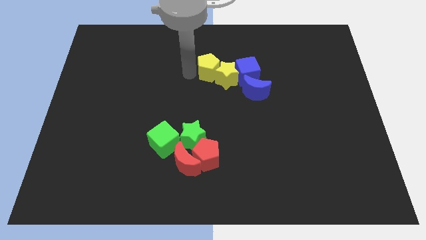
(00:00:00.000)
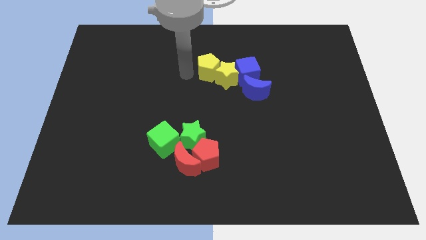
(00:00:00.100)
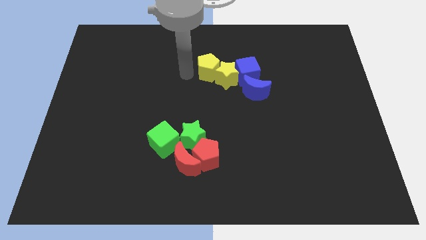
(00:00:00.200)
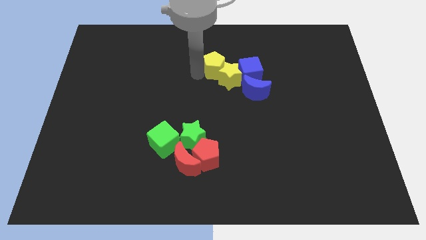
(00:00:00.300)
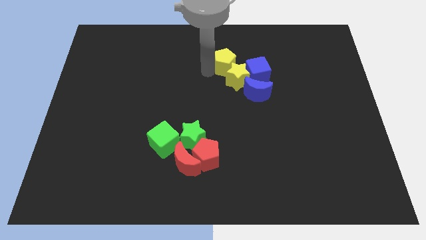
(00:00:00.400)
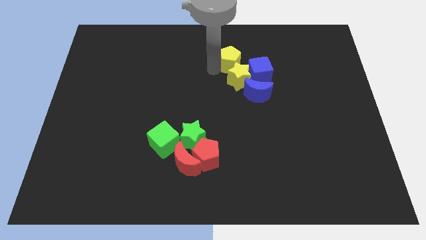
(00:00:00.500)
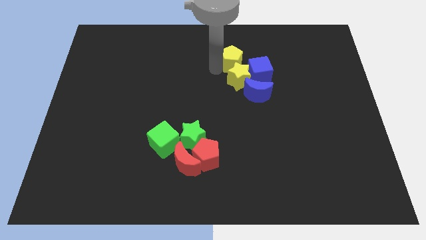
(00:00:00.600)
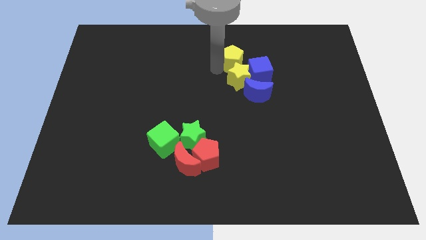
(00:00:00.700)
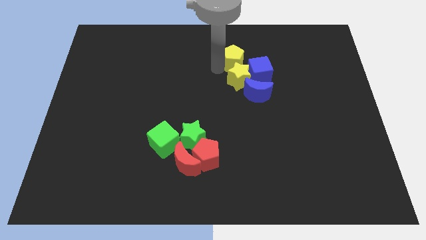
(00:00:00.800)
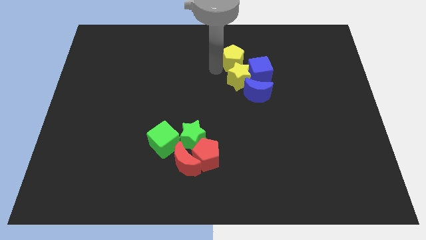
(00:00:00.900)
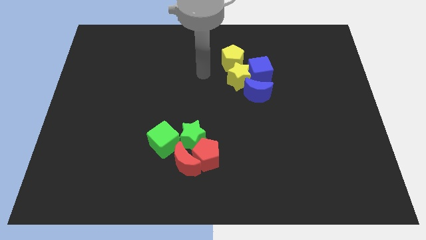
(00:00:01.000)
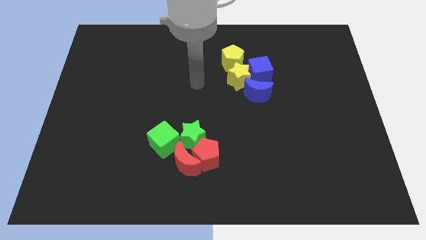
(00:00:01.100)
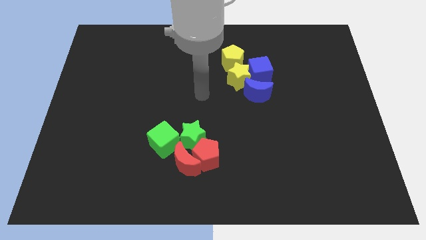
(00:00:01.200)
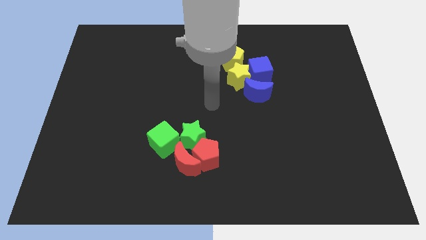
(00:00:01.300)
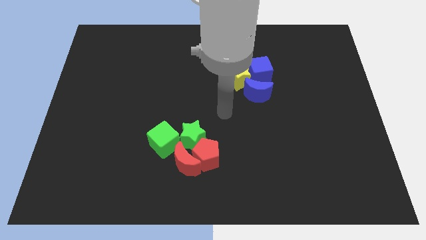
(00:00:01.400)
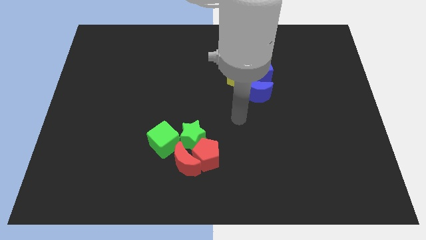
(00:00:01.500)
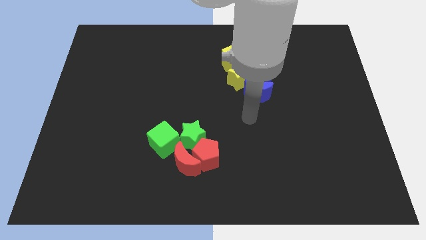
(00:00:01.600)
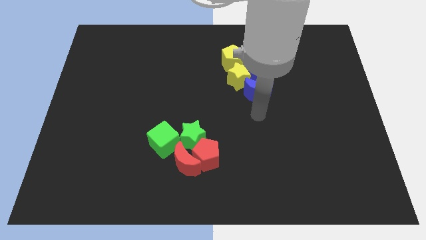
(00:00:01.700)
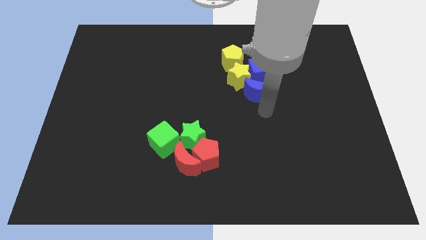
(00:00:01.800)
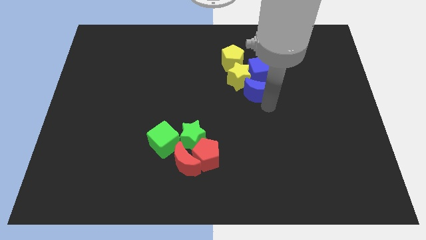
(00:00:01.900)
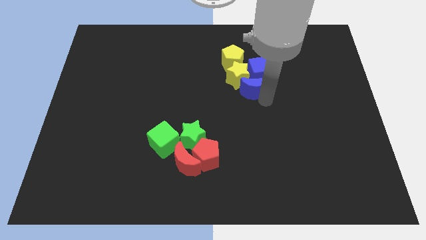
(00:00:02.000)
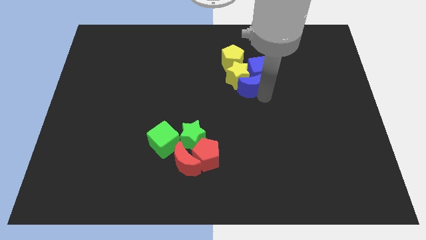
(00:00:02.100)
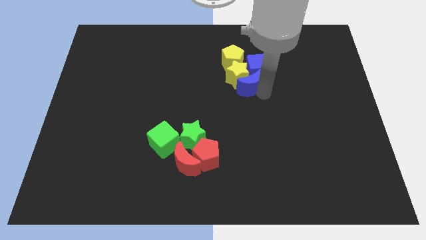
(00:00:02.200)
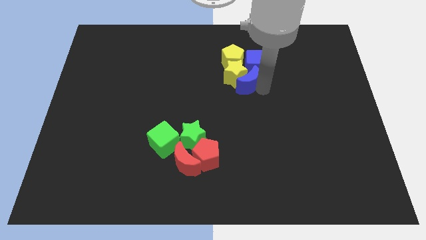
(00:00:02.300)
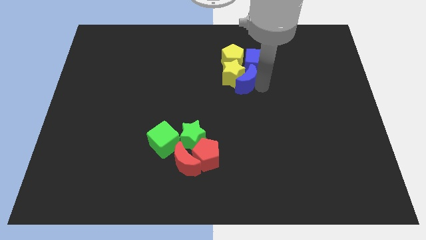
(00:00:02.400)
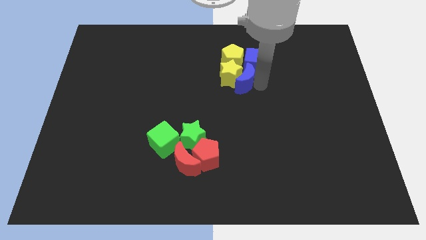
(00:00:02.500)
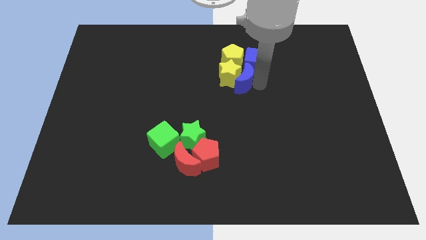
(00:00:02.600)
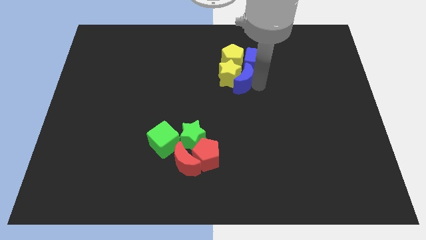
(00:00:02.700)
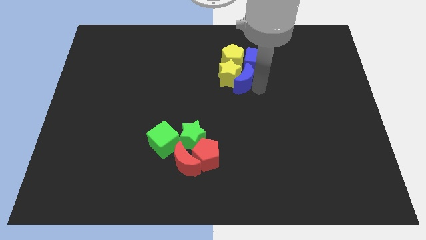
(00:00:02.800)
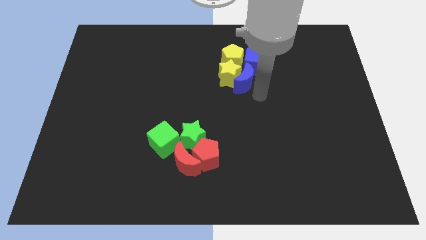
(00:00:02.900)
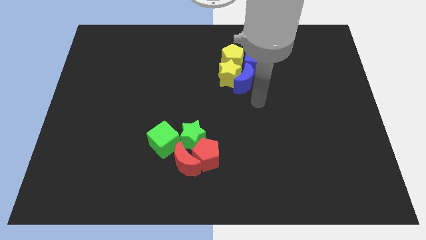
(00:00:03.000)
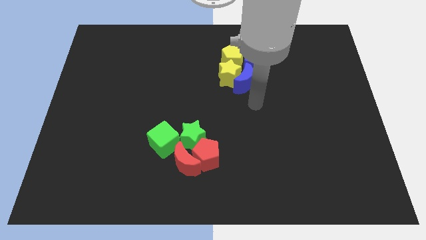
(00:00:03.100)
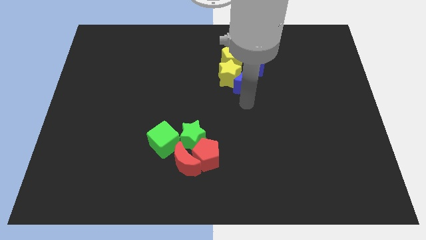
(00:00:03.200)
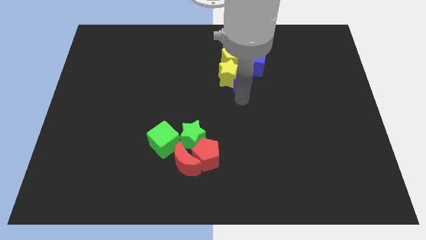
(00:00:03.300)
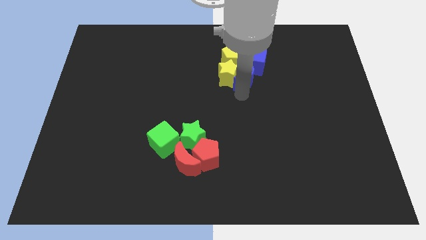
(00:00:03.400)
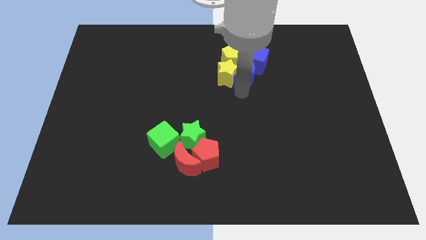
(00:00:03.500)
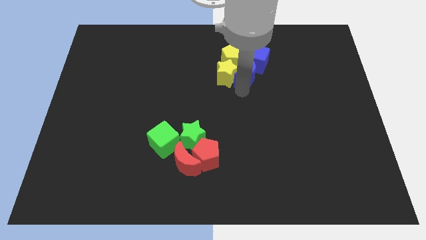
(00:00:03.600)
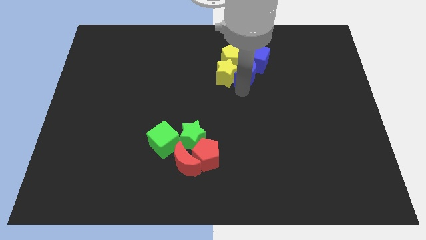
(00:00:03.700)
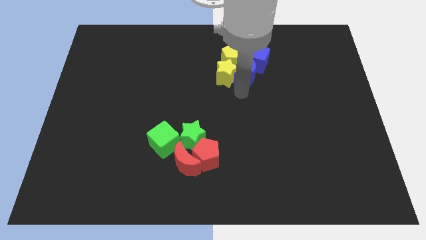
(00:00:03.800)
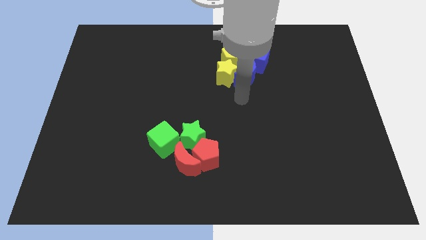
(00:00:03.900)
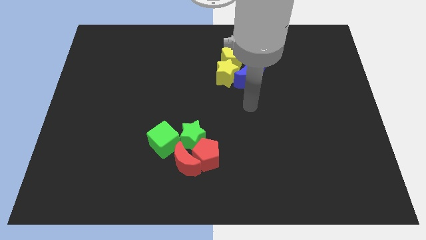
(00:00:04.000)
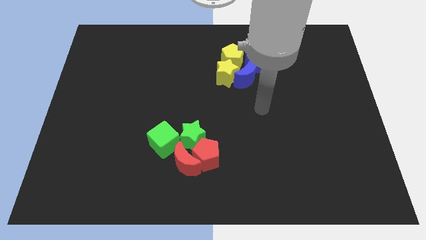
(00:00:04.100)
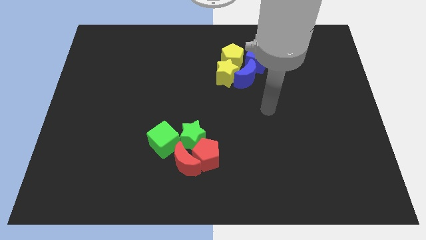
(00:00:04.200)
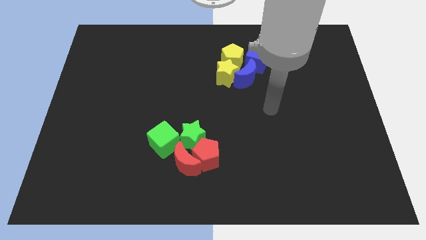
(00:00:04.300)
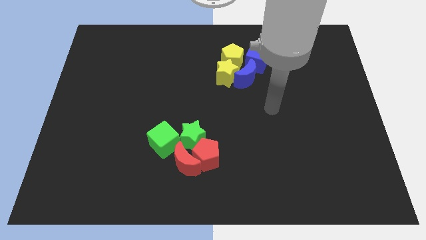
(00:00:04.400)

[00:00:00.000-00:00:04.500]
move your arm away from the yellow pentagon

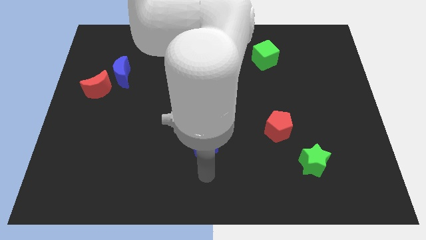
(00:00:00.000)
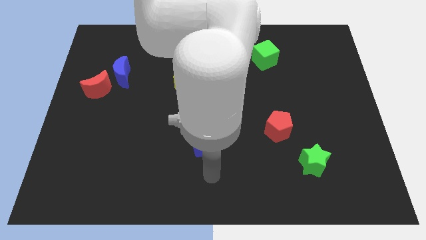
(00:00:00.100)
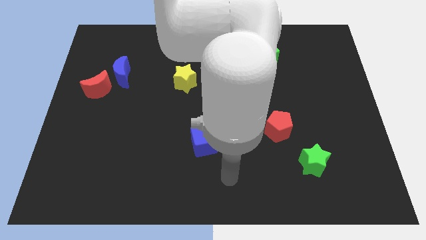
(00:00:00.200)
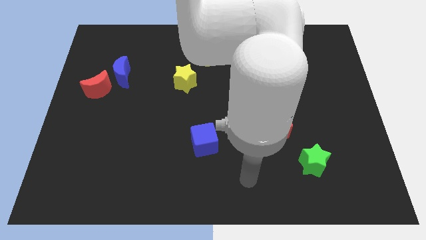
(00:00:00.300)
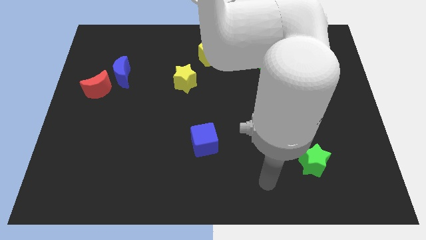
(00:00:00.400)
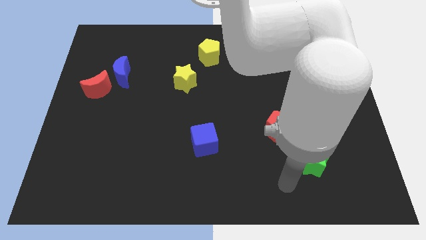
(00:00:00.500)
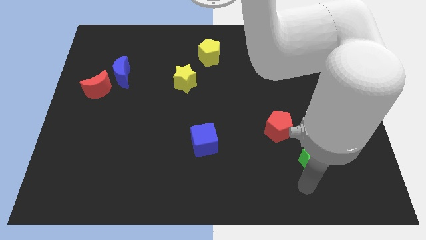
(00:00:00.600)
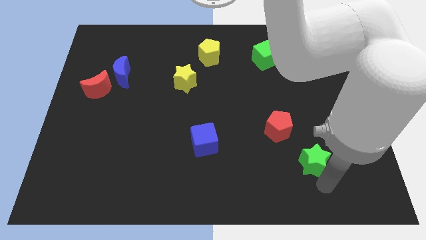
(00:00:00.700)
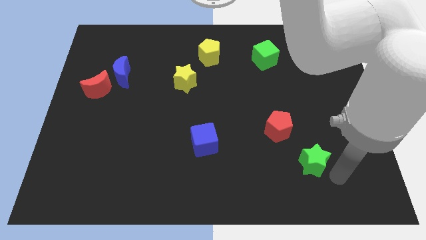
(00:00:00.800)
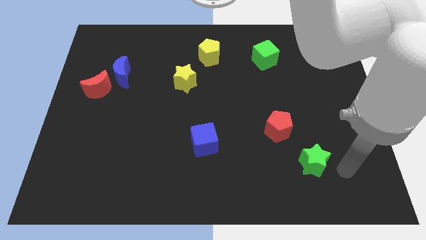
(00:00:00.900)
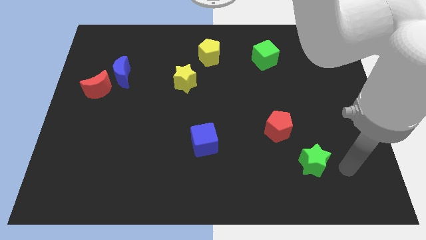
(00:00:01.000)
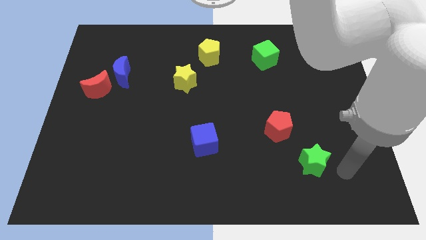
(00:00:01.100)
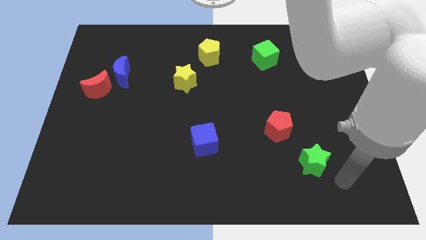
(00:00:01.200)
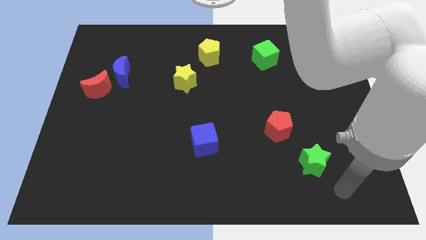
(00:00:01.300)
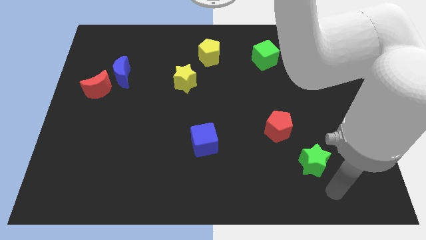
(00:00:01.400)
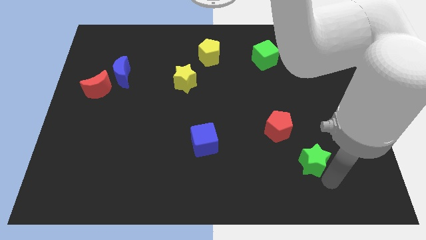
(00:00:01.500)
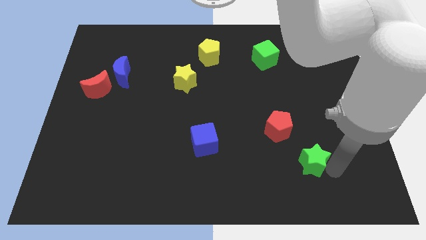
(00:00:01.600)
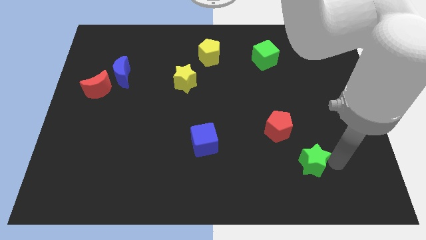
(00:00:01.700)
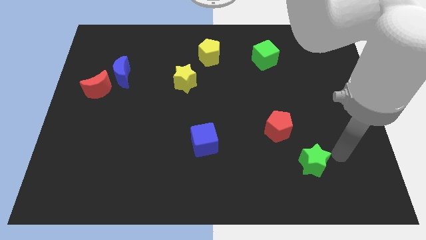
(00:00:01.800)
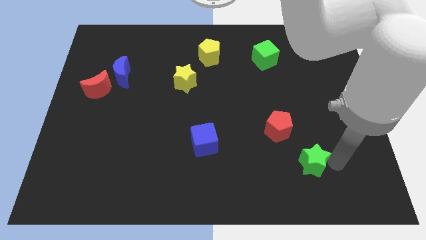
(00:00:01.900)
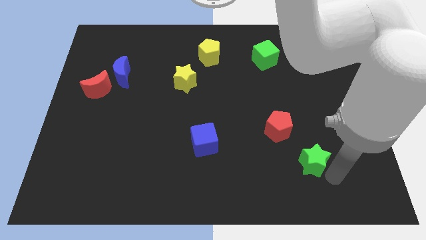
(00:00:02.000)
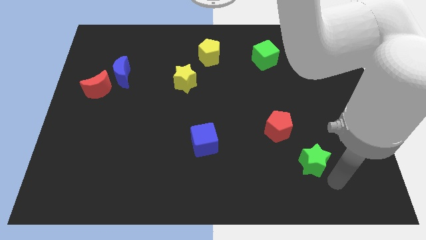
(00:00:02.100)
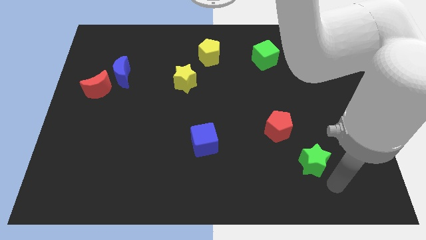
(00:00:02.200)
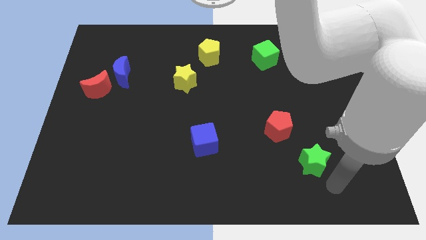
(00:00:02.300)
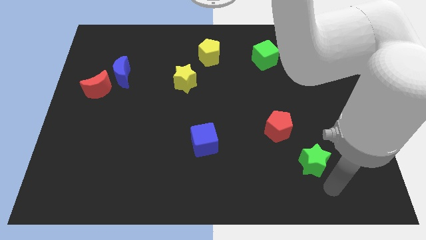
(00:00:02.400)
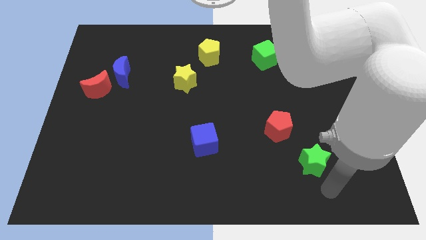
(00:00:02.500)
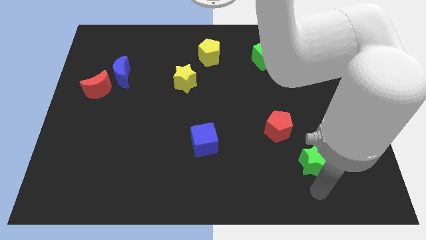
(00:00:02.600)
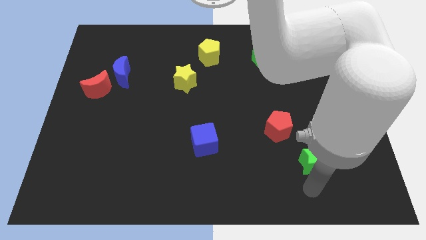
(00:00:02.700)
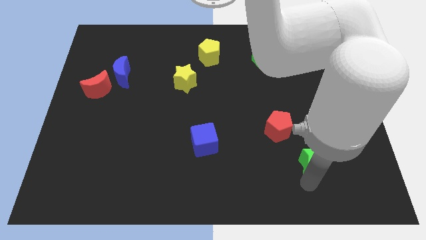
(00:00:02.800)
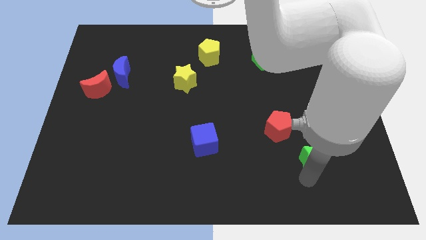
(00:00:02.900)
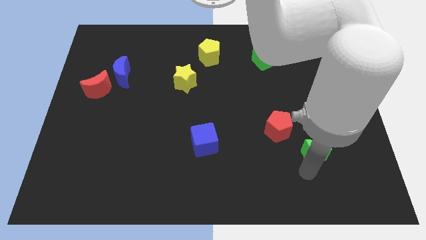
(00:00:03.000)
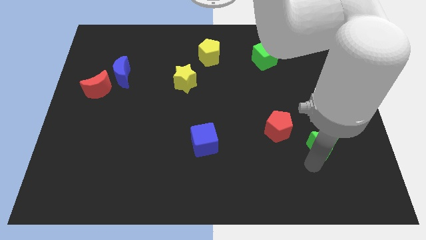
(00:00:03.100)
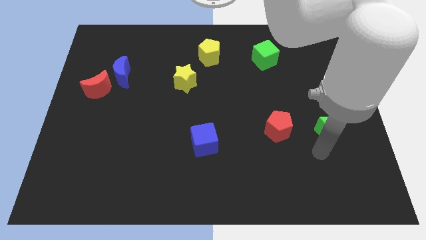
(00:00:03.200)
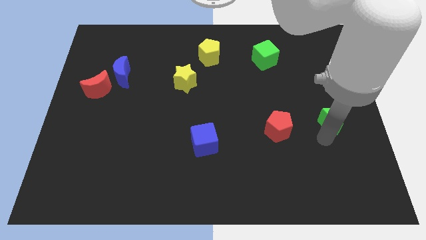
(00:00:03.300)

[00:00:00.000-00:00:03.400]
push the green star to the right of the red pentagon

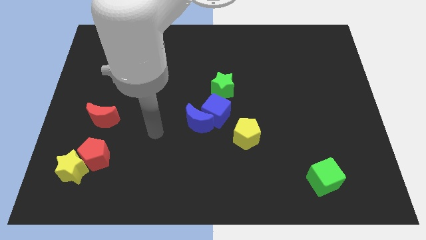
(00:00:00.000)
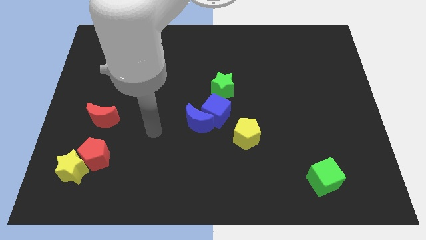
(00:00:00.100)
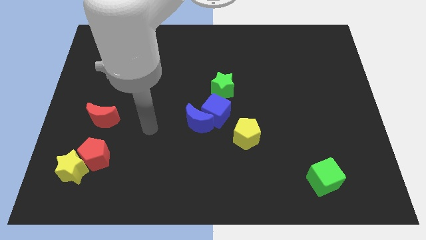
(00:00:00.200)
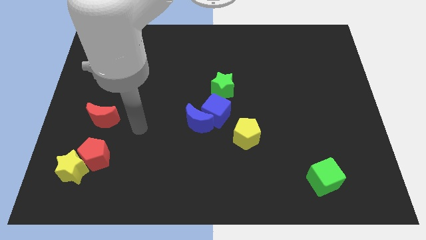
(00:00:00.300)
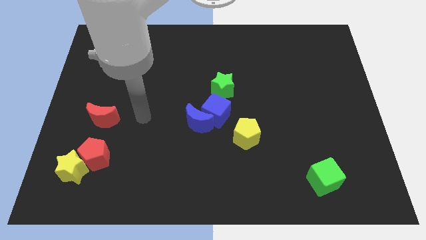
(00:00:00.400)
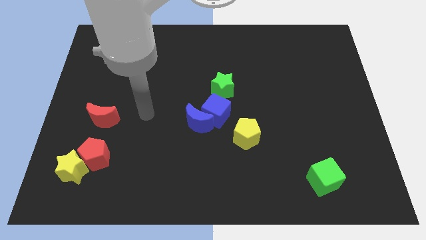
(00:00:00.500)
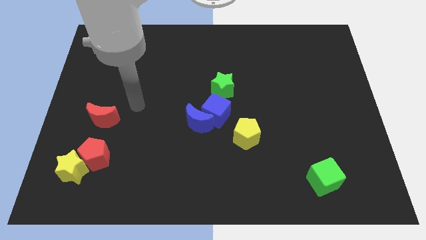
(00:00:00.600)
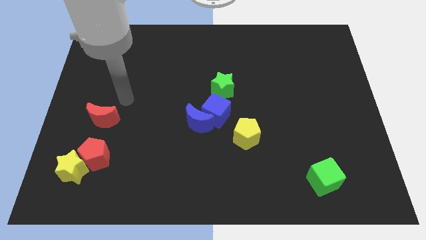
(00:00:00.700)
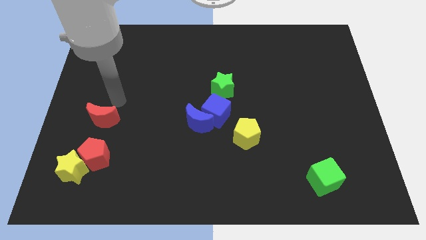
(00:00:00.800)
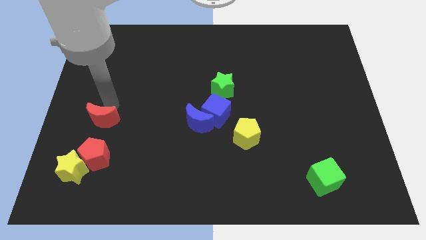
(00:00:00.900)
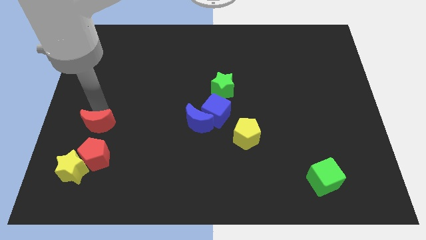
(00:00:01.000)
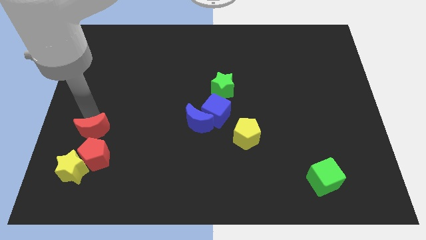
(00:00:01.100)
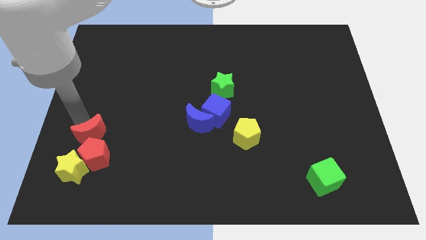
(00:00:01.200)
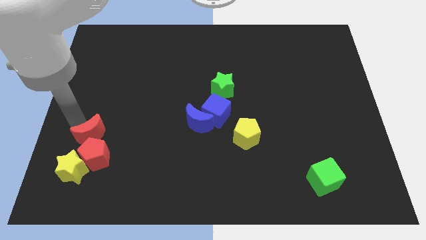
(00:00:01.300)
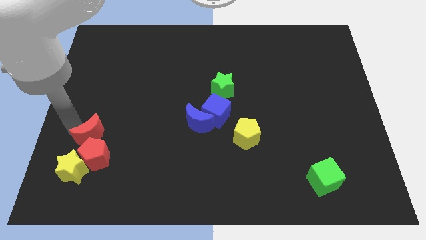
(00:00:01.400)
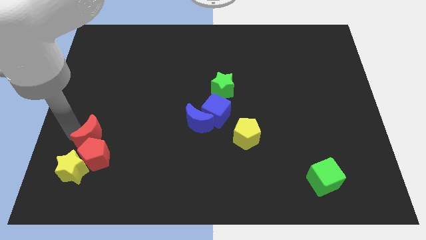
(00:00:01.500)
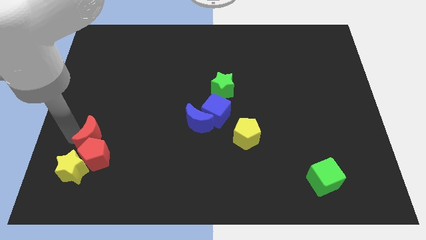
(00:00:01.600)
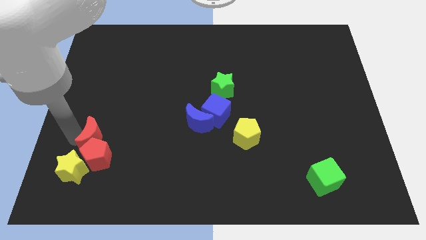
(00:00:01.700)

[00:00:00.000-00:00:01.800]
move the red moon into the red pentagon
